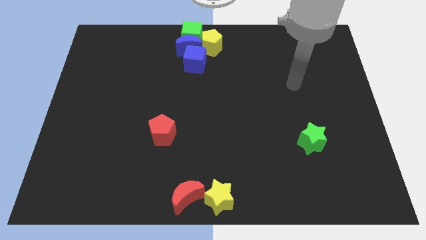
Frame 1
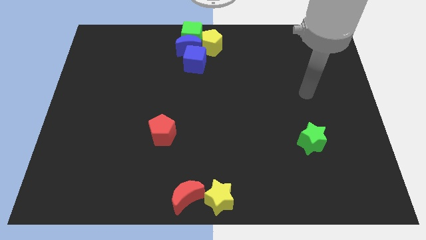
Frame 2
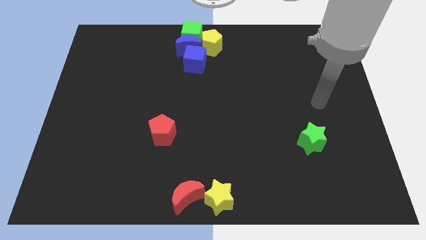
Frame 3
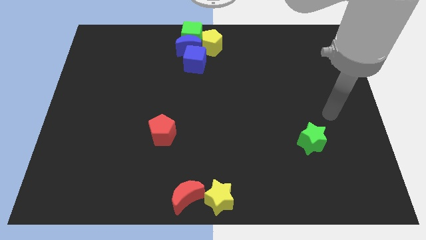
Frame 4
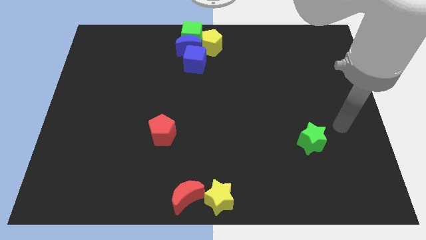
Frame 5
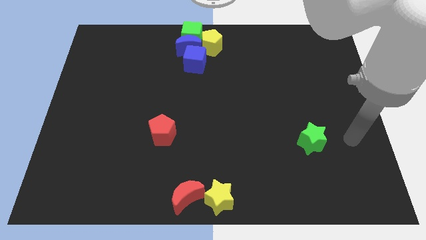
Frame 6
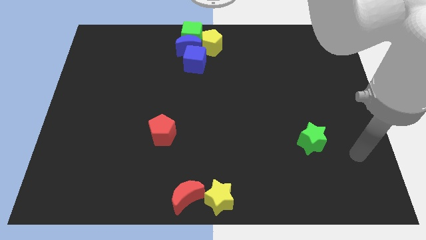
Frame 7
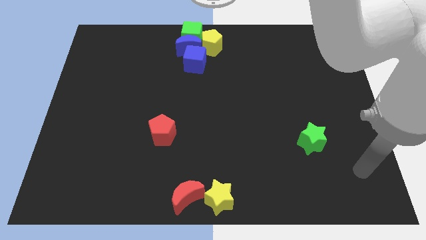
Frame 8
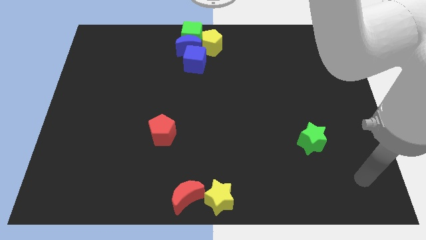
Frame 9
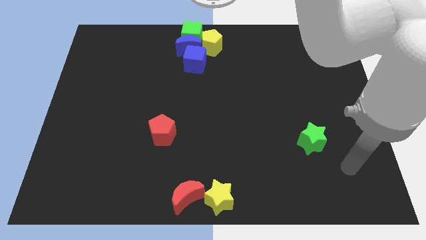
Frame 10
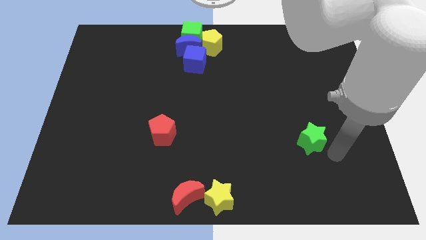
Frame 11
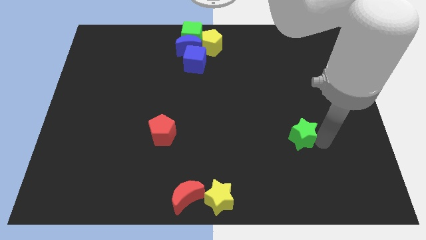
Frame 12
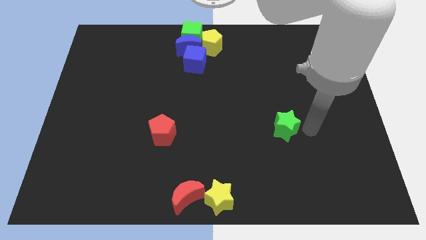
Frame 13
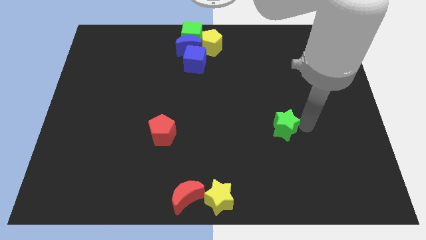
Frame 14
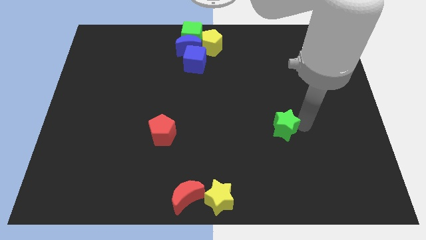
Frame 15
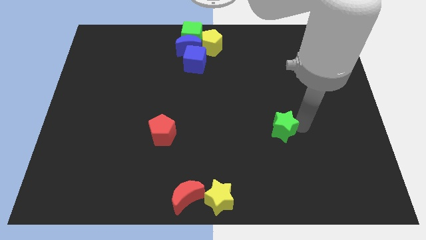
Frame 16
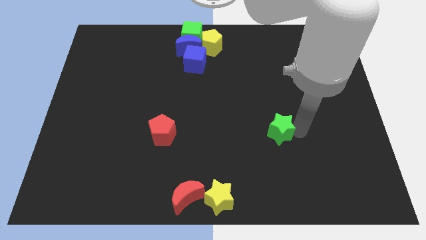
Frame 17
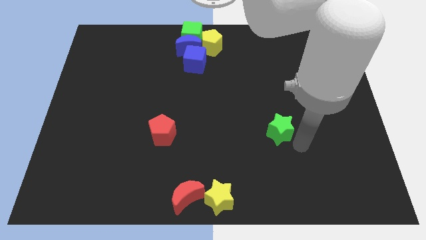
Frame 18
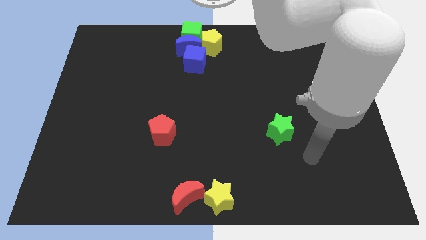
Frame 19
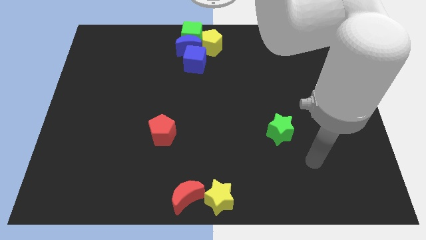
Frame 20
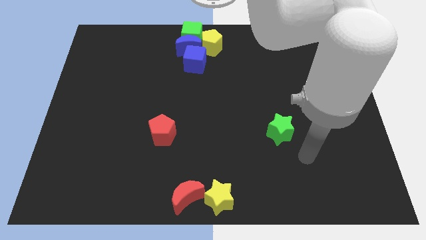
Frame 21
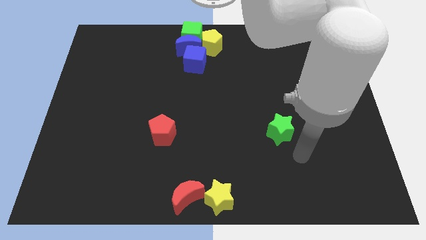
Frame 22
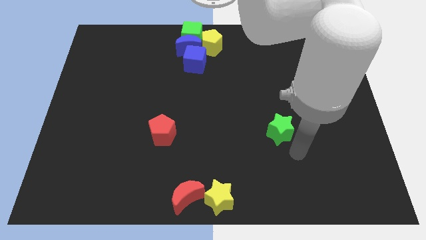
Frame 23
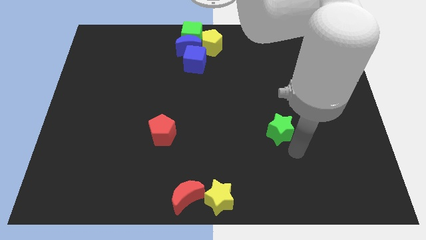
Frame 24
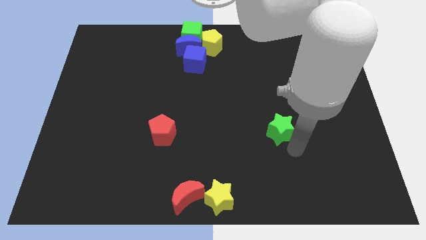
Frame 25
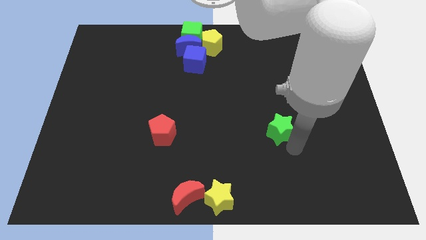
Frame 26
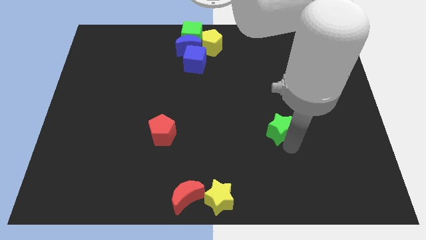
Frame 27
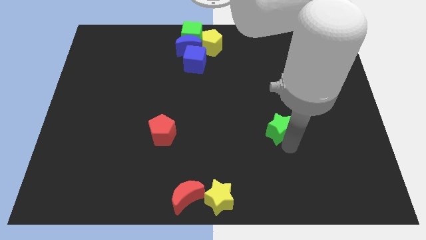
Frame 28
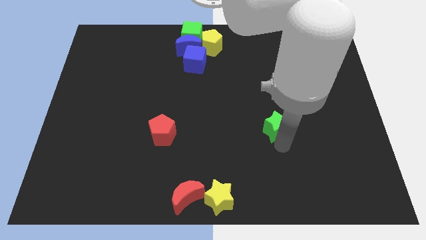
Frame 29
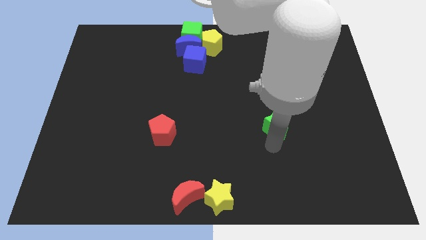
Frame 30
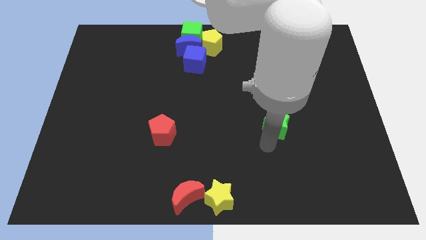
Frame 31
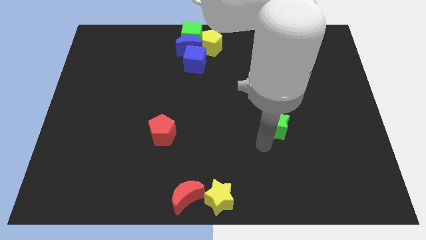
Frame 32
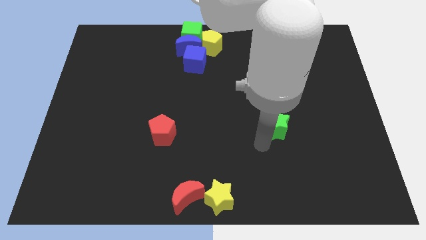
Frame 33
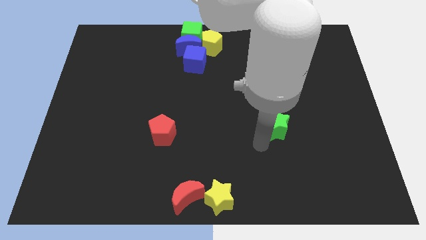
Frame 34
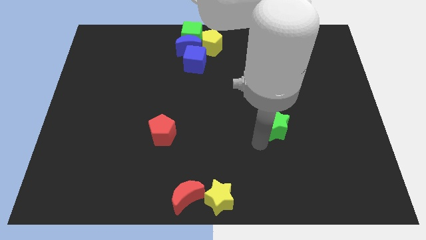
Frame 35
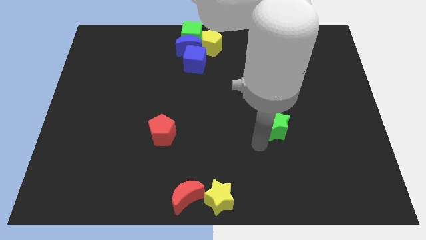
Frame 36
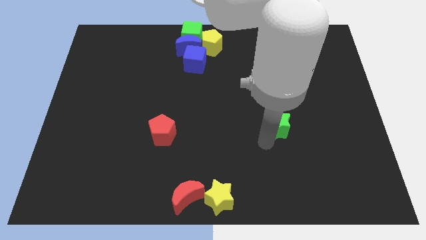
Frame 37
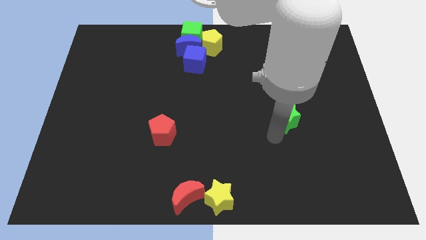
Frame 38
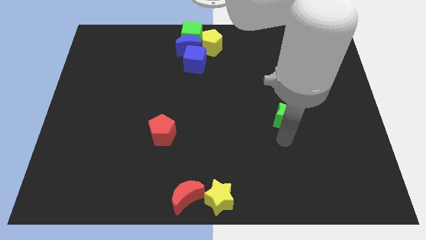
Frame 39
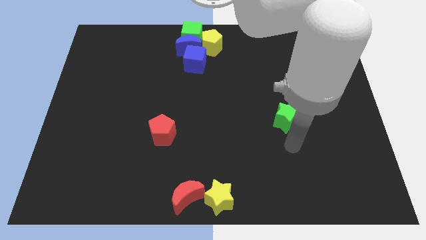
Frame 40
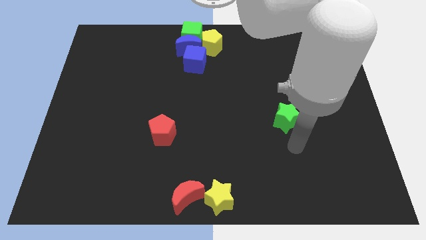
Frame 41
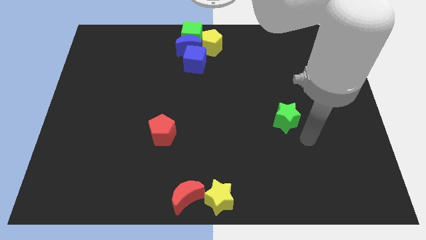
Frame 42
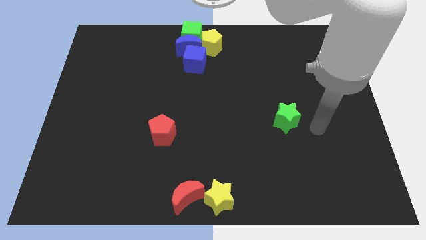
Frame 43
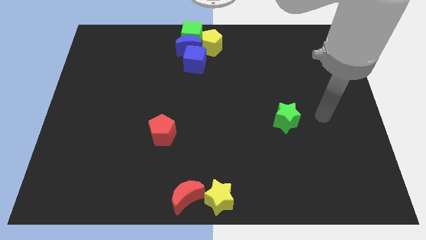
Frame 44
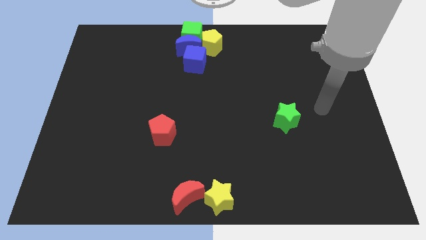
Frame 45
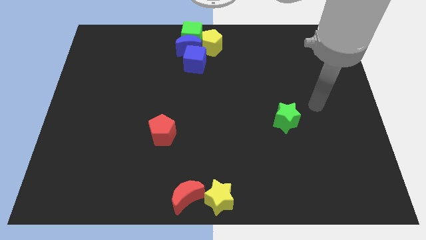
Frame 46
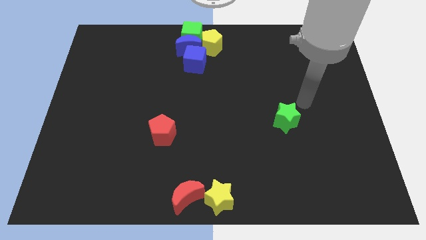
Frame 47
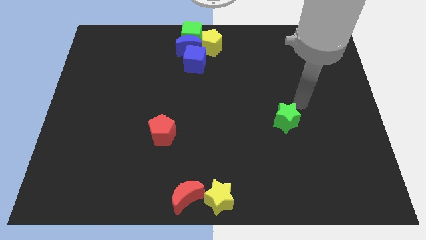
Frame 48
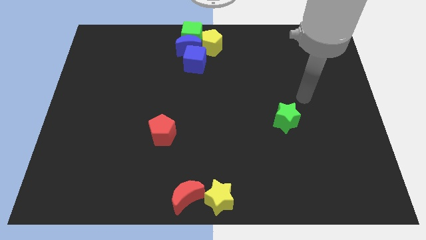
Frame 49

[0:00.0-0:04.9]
adjust the green star at the right side of the board

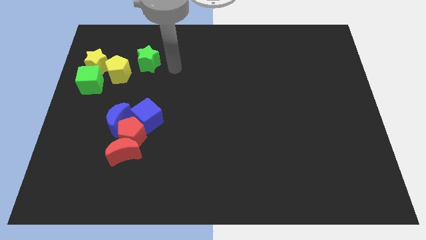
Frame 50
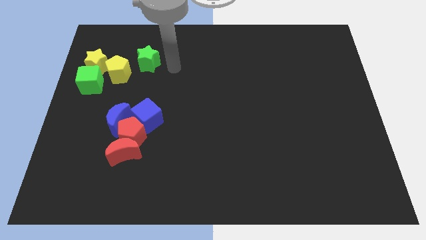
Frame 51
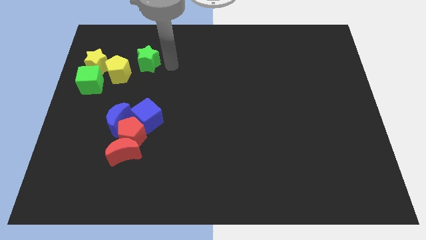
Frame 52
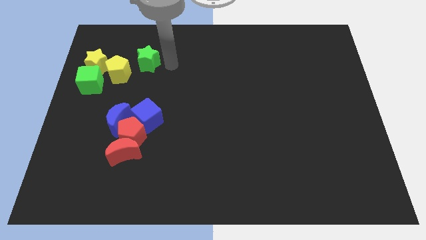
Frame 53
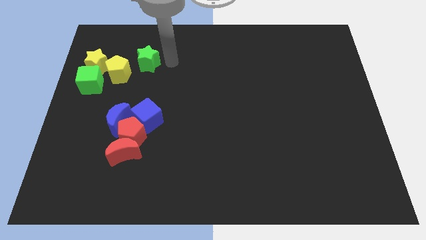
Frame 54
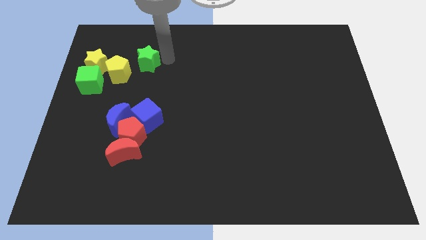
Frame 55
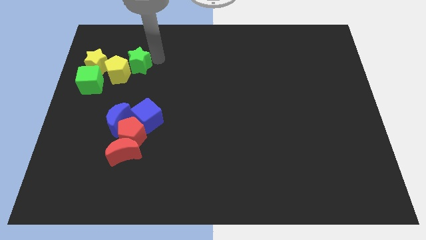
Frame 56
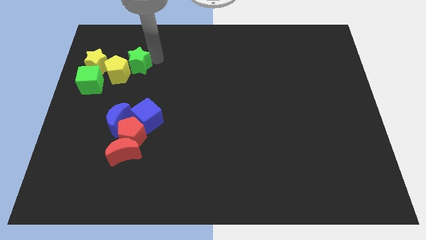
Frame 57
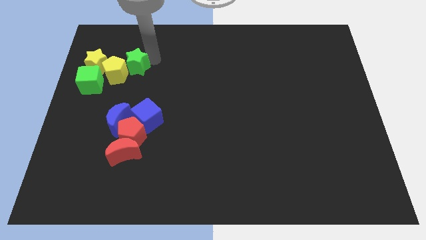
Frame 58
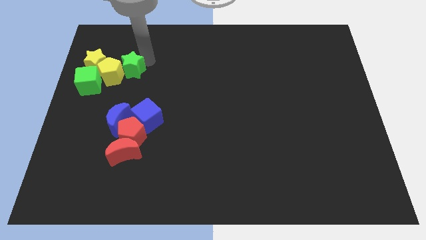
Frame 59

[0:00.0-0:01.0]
push green star towards yellow pentagon

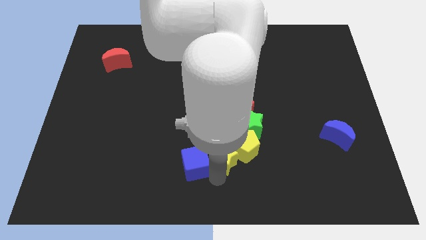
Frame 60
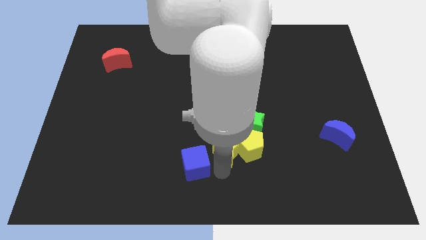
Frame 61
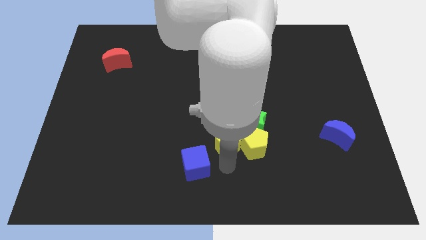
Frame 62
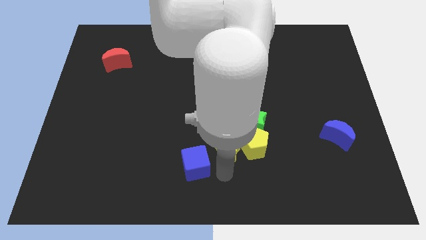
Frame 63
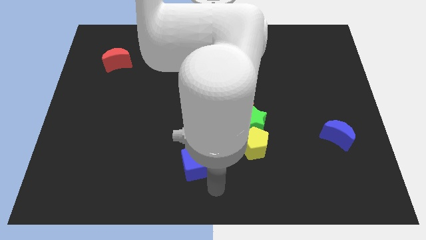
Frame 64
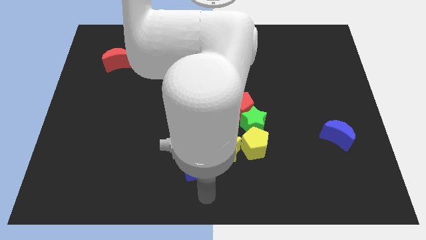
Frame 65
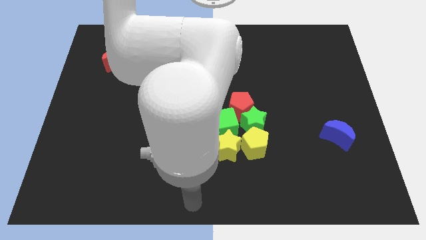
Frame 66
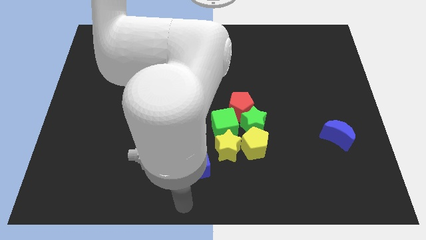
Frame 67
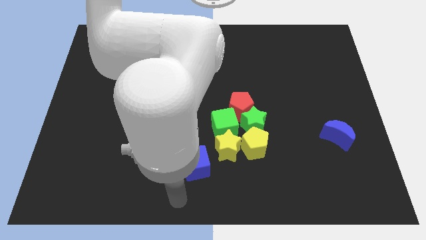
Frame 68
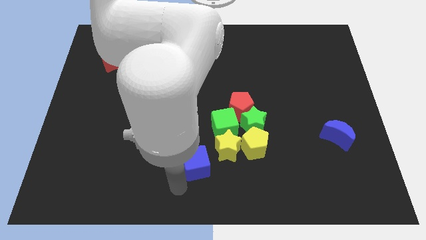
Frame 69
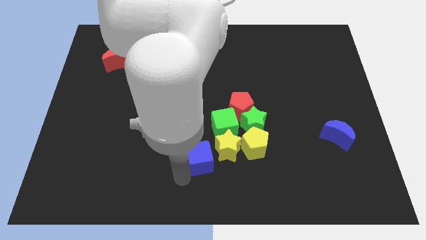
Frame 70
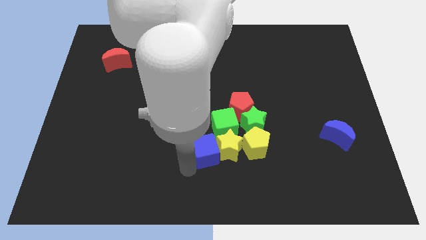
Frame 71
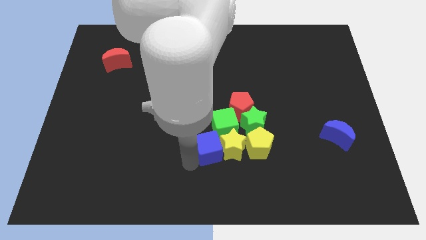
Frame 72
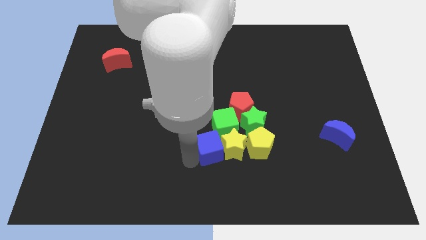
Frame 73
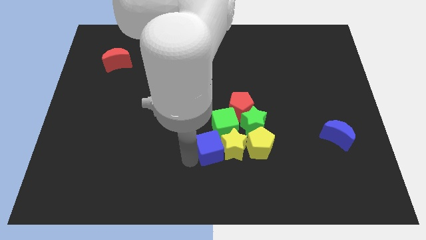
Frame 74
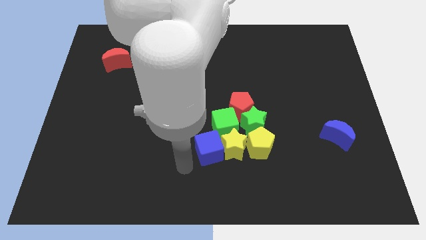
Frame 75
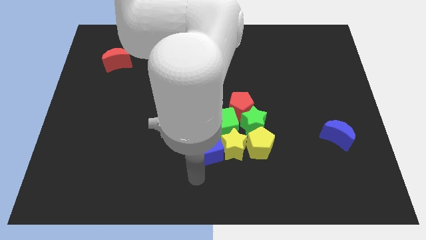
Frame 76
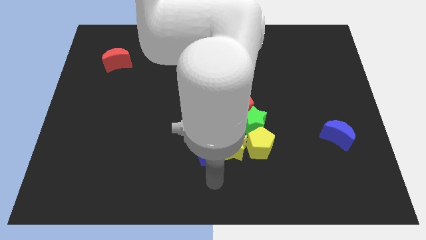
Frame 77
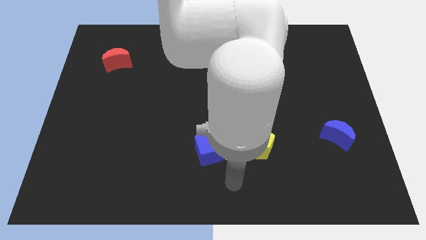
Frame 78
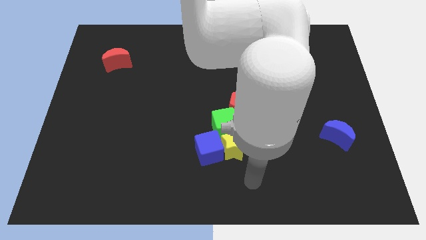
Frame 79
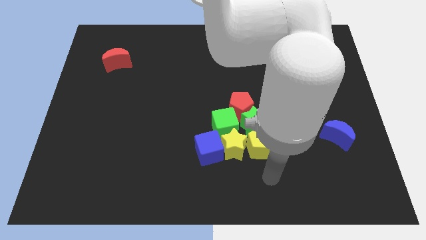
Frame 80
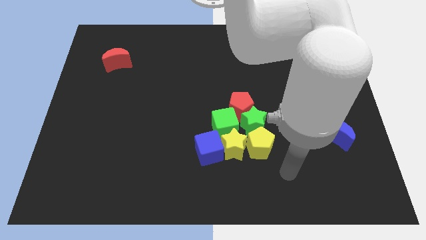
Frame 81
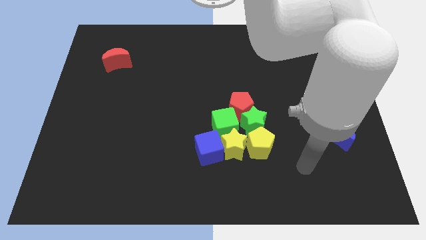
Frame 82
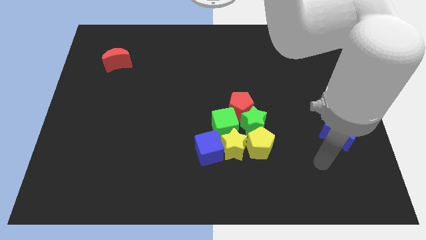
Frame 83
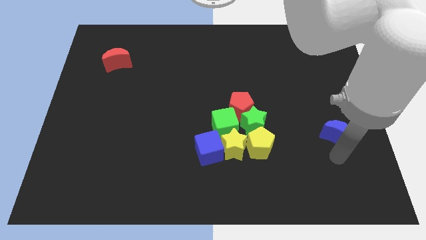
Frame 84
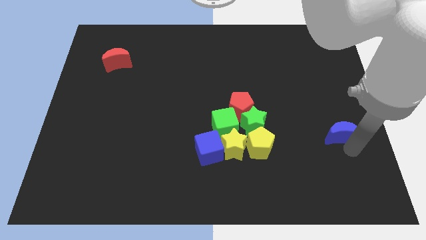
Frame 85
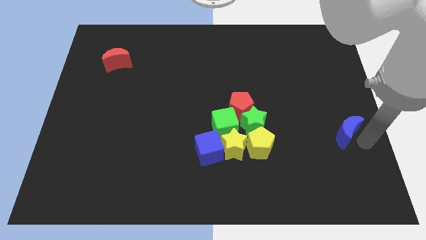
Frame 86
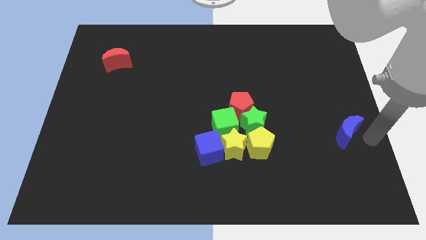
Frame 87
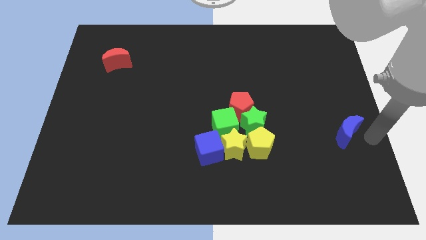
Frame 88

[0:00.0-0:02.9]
place the blue cube left to the yellow star

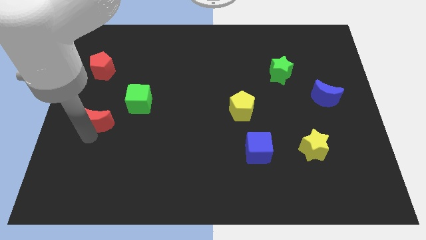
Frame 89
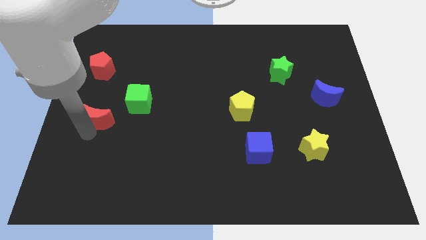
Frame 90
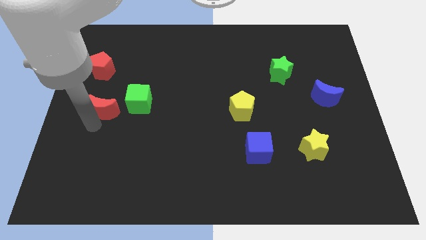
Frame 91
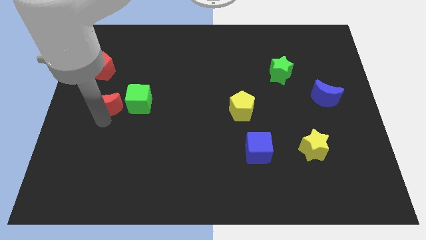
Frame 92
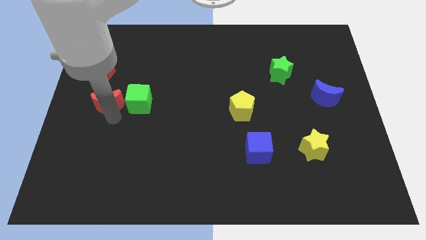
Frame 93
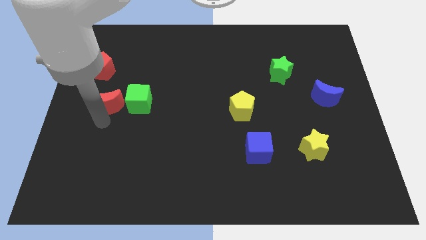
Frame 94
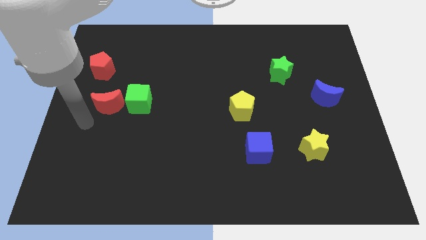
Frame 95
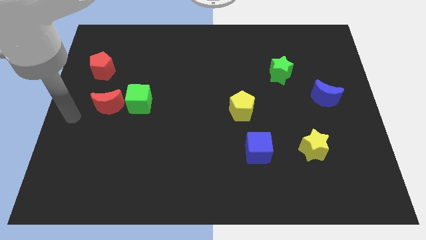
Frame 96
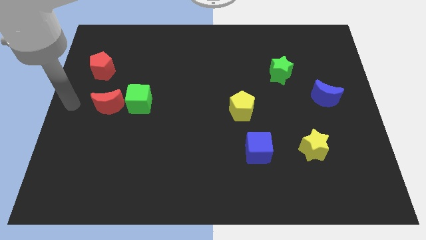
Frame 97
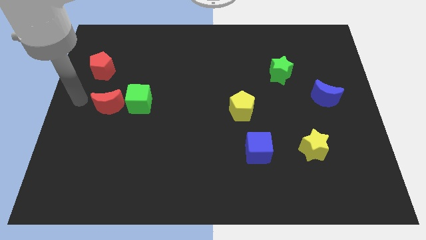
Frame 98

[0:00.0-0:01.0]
place the red crescent left to the green cube
